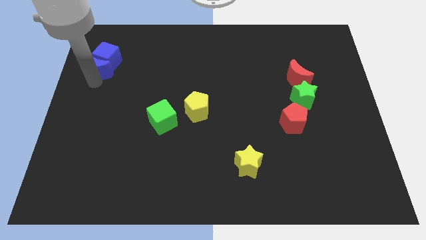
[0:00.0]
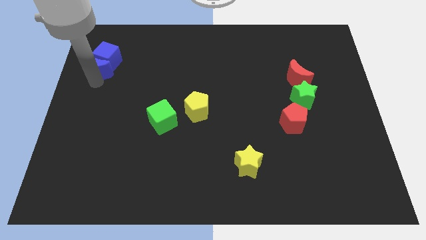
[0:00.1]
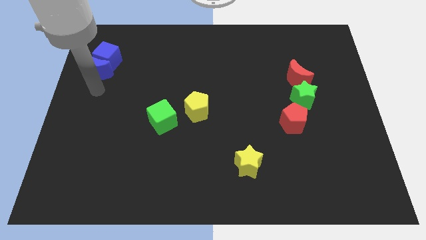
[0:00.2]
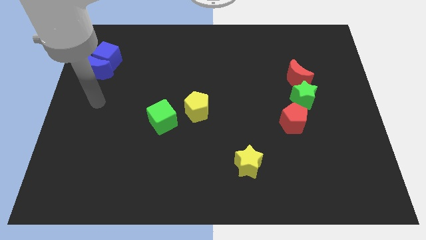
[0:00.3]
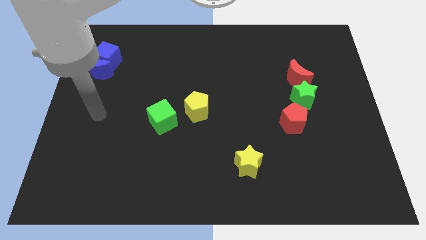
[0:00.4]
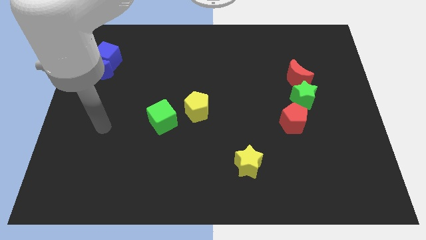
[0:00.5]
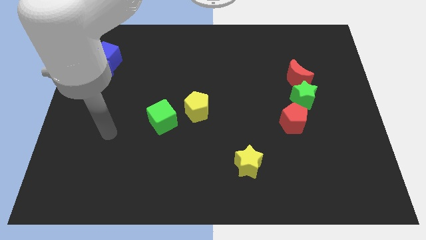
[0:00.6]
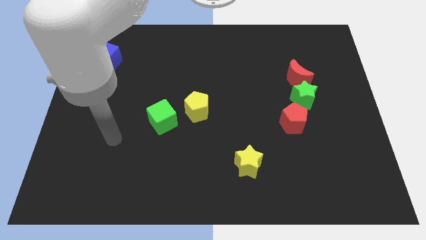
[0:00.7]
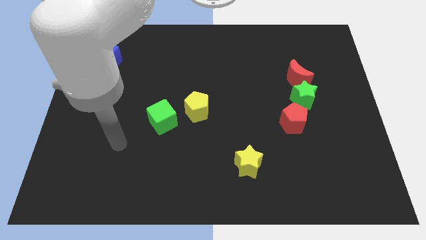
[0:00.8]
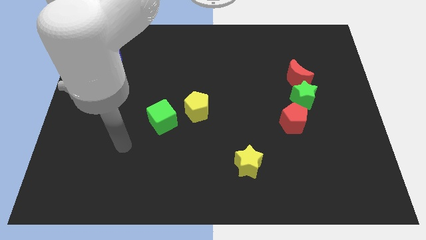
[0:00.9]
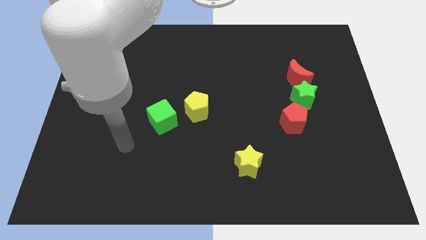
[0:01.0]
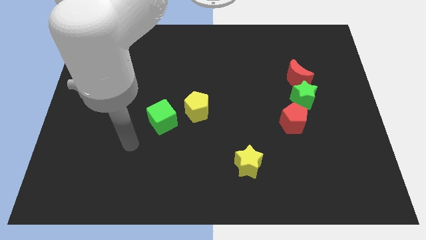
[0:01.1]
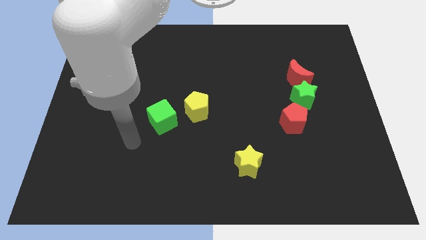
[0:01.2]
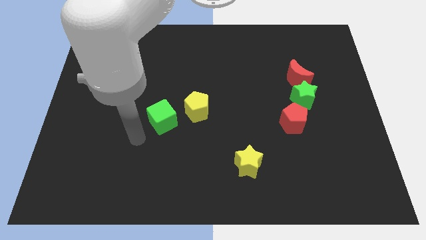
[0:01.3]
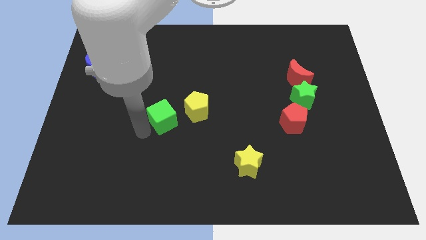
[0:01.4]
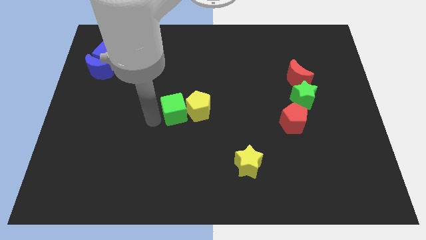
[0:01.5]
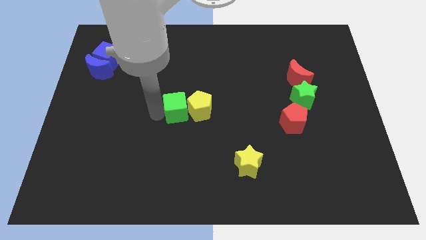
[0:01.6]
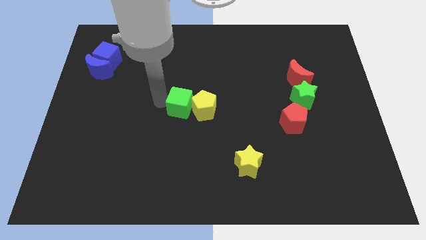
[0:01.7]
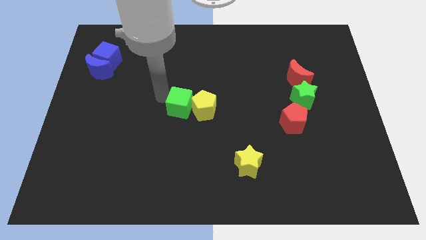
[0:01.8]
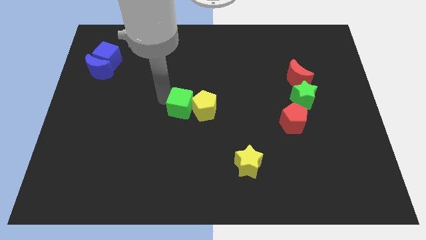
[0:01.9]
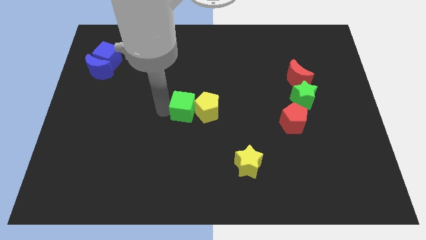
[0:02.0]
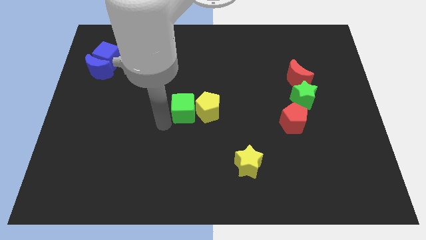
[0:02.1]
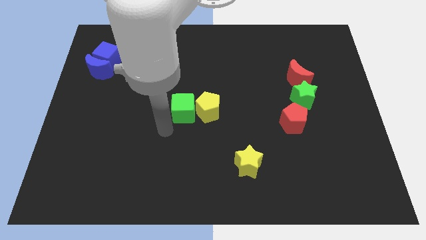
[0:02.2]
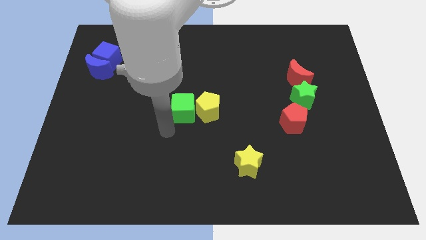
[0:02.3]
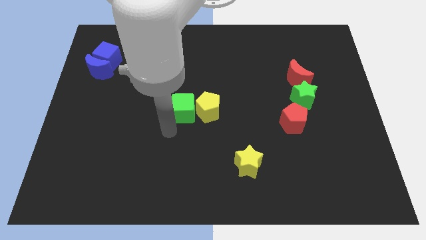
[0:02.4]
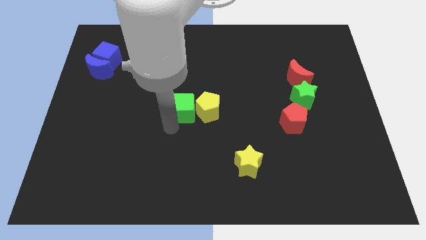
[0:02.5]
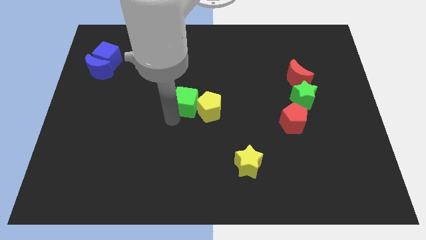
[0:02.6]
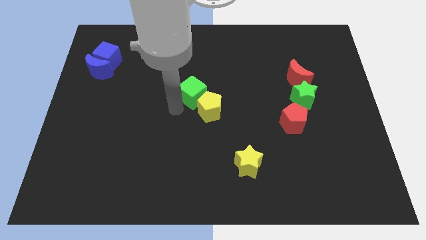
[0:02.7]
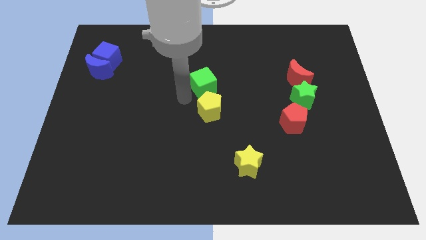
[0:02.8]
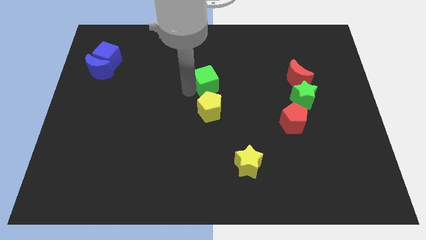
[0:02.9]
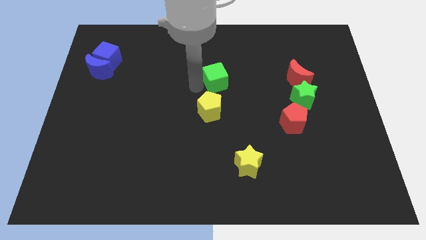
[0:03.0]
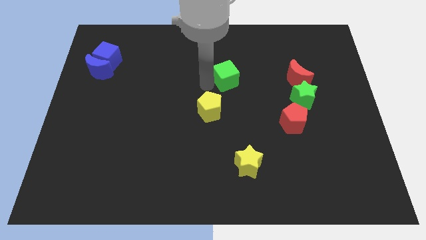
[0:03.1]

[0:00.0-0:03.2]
push the green cube to center of the board

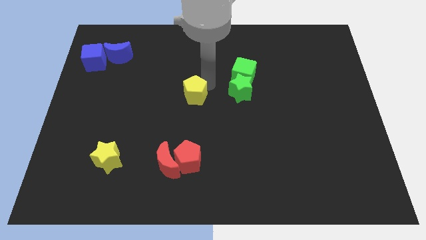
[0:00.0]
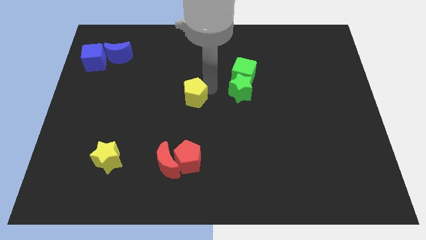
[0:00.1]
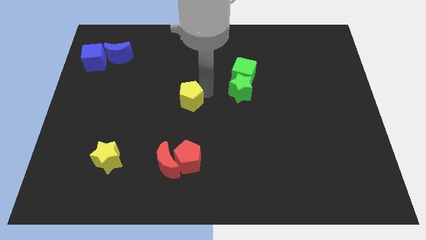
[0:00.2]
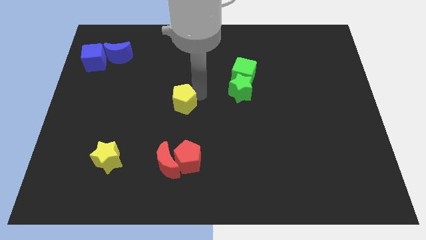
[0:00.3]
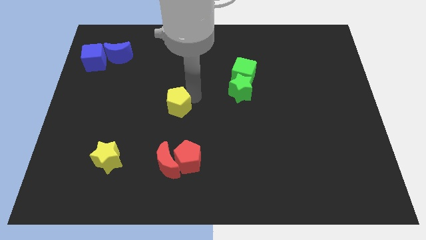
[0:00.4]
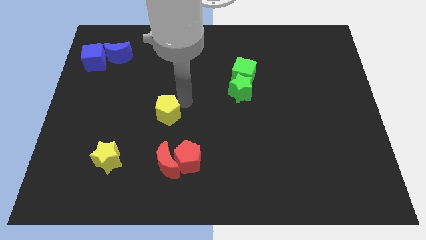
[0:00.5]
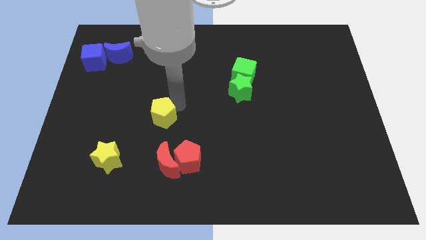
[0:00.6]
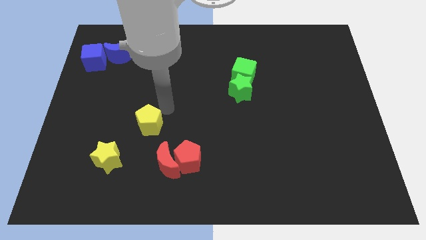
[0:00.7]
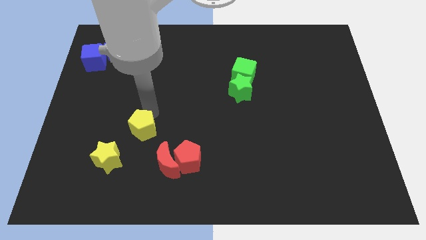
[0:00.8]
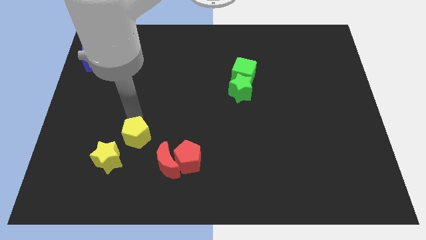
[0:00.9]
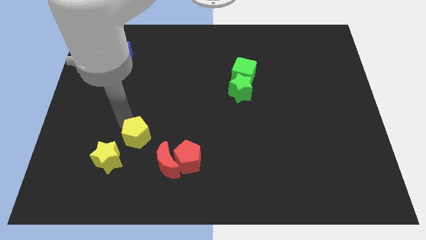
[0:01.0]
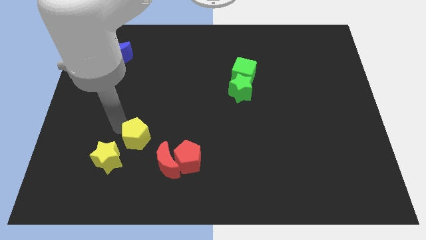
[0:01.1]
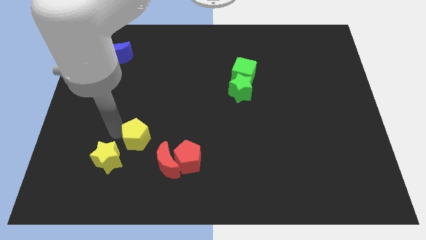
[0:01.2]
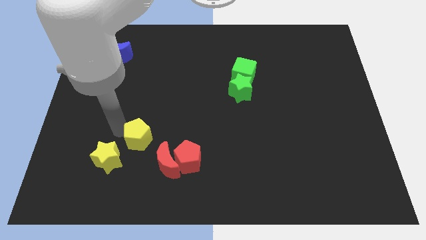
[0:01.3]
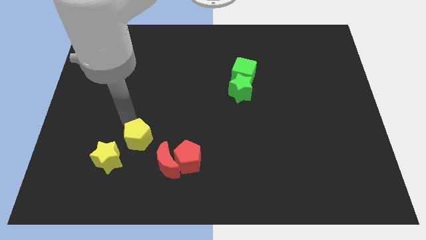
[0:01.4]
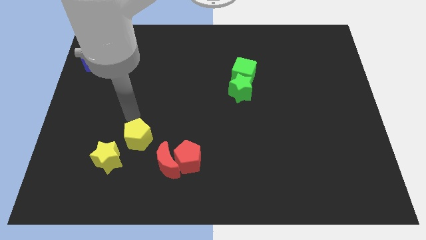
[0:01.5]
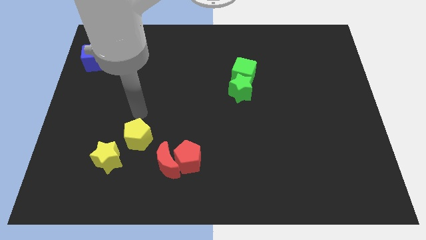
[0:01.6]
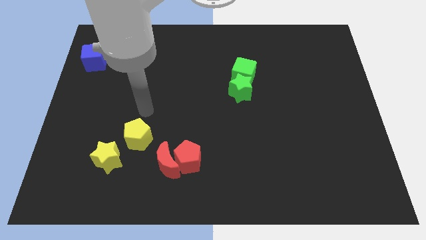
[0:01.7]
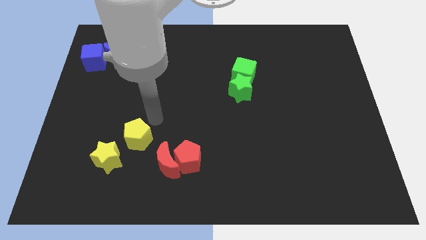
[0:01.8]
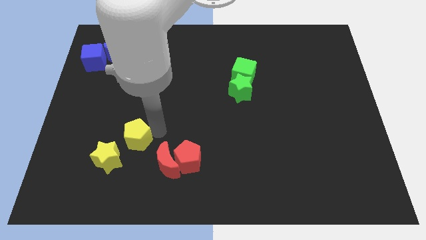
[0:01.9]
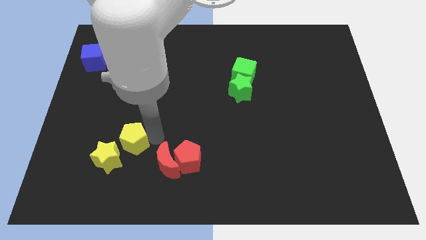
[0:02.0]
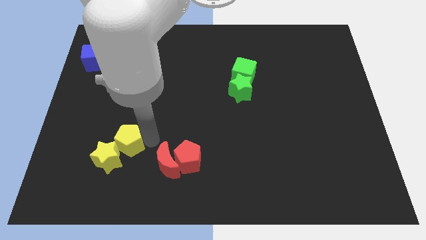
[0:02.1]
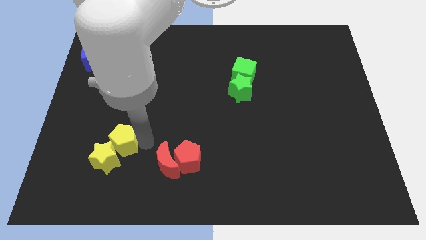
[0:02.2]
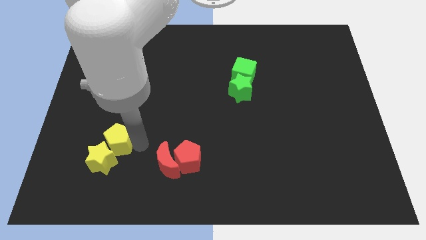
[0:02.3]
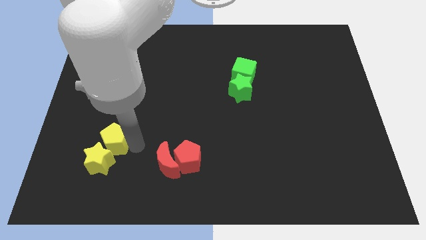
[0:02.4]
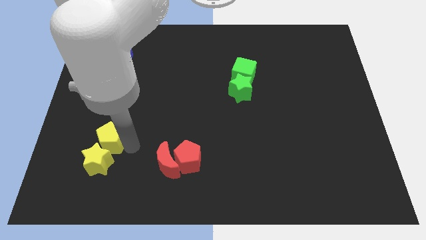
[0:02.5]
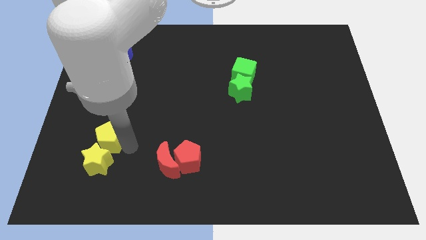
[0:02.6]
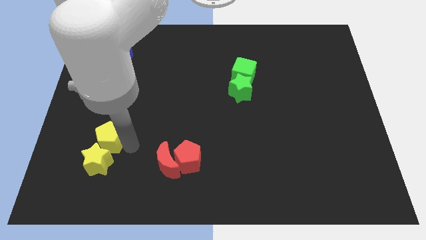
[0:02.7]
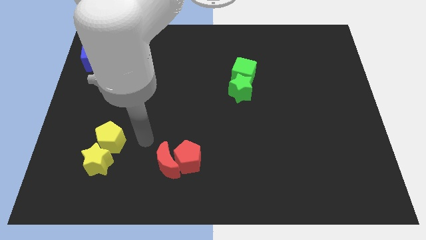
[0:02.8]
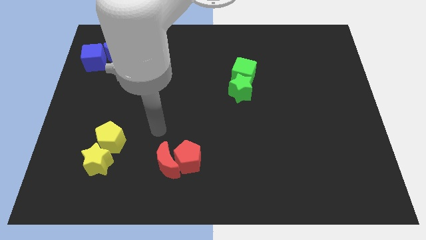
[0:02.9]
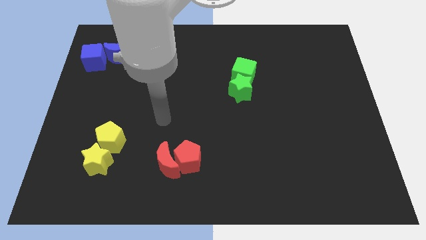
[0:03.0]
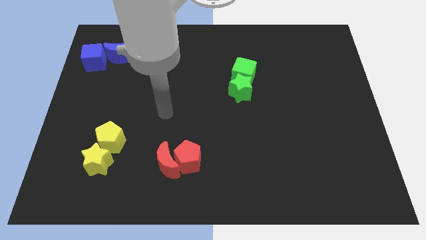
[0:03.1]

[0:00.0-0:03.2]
push the yellow pentagon into the yellow star

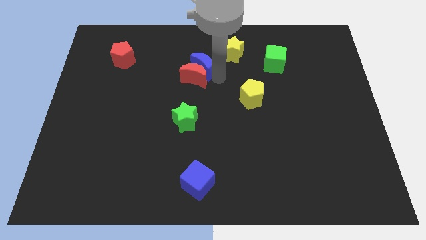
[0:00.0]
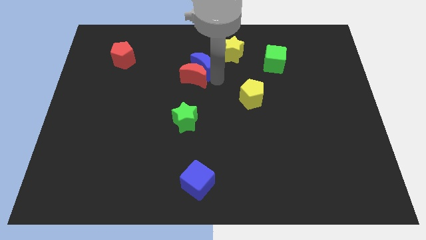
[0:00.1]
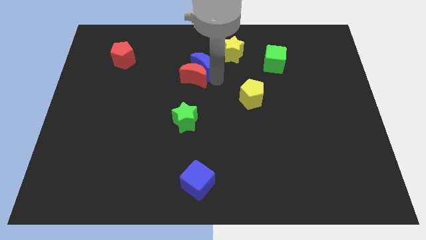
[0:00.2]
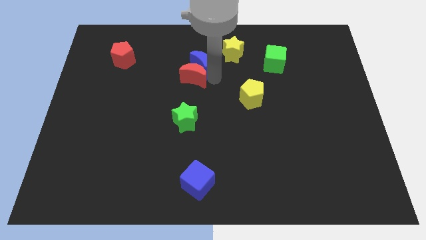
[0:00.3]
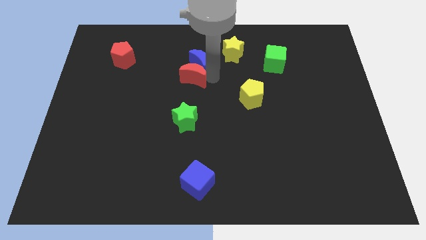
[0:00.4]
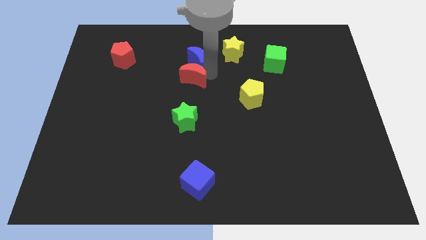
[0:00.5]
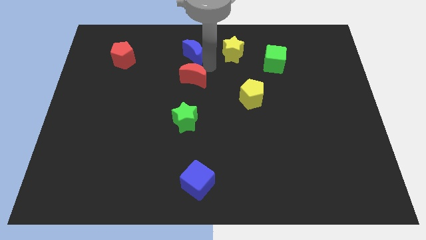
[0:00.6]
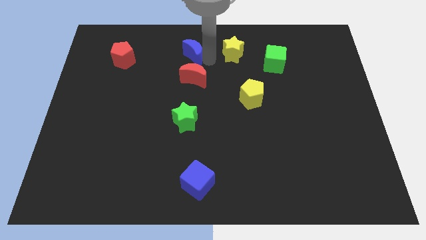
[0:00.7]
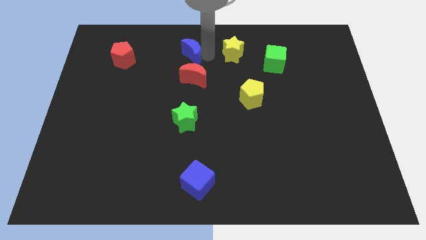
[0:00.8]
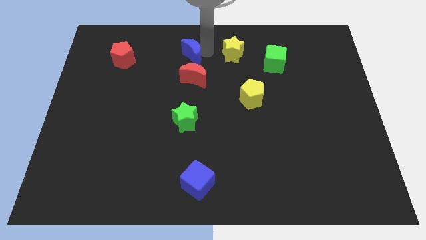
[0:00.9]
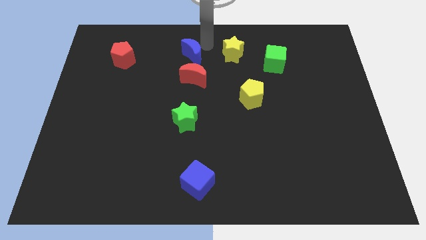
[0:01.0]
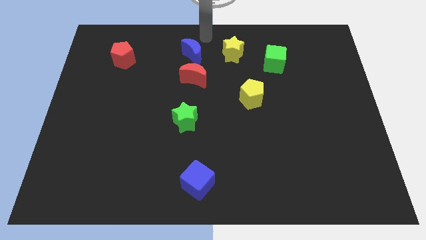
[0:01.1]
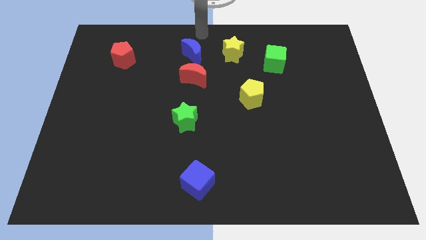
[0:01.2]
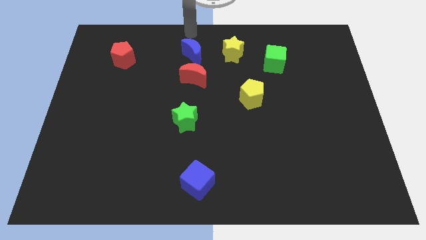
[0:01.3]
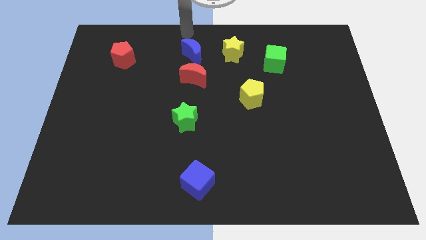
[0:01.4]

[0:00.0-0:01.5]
separate the blue moon from the red crescent

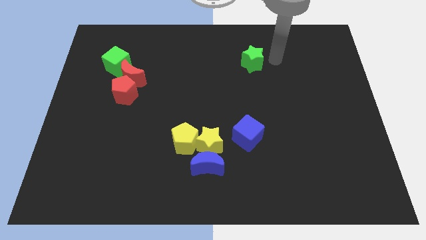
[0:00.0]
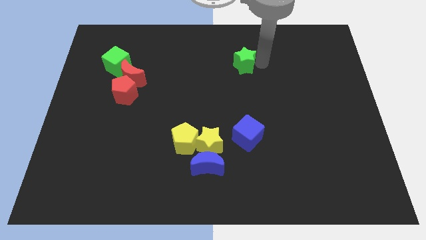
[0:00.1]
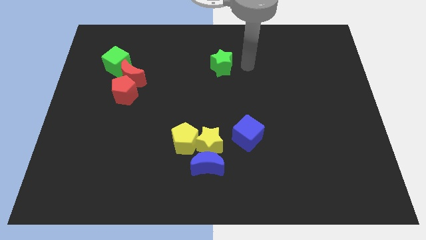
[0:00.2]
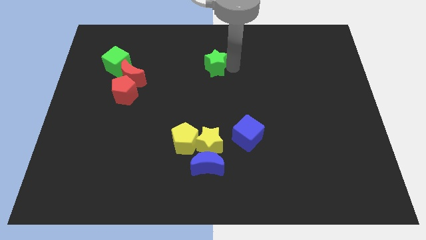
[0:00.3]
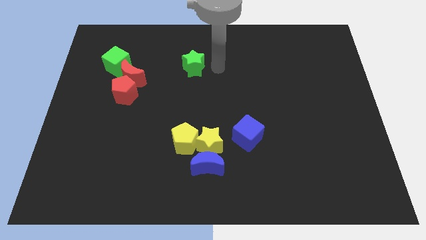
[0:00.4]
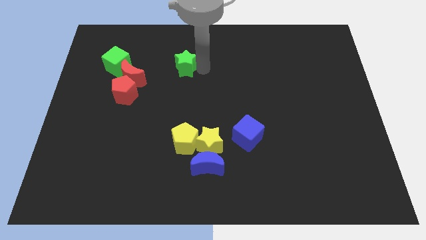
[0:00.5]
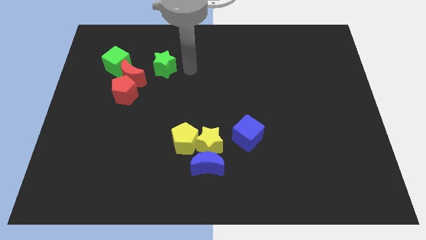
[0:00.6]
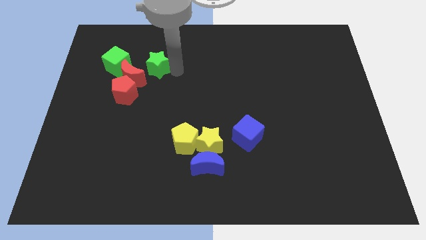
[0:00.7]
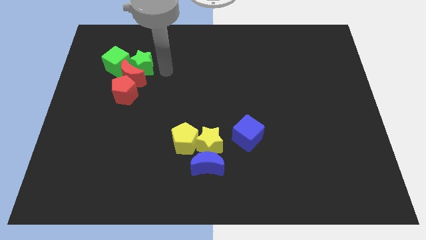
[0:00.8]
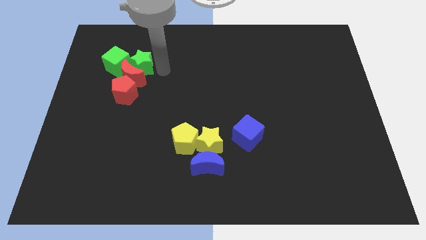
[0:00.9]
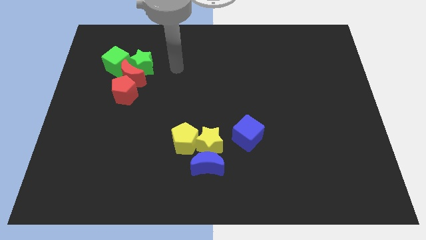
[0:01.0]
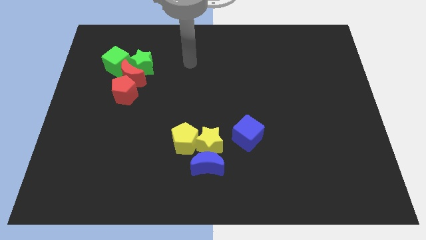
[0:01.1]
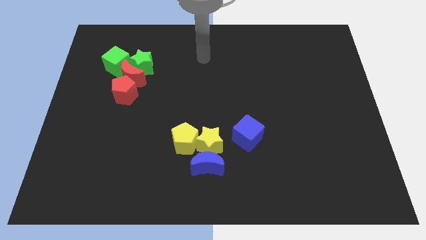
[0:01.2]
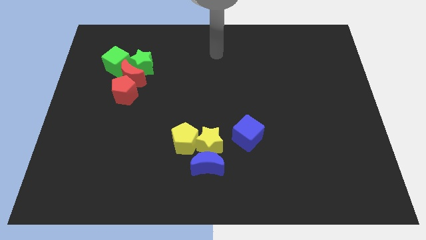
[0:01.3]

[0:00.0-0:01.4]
push the star right to the green cube at the left of the board
